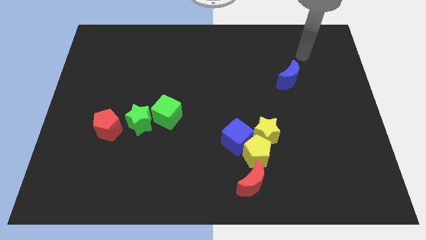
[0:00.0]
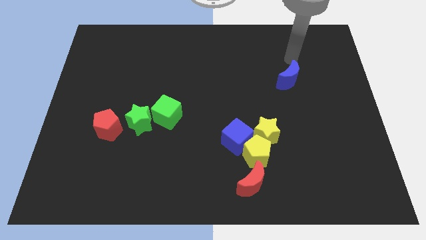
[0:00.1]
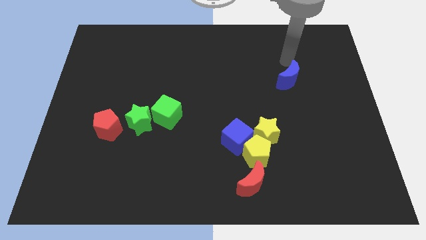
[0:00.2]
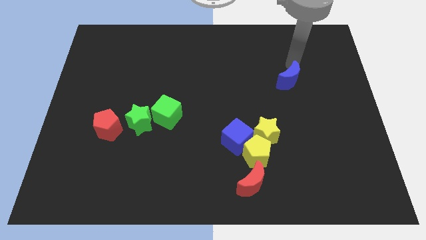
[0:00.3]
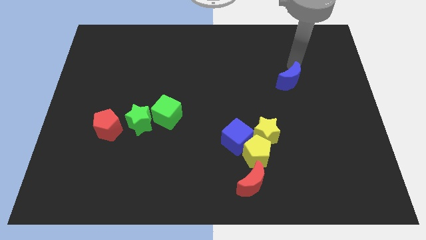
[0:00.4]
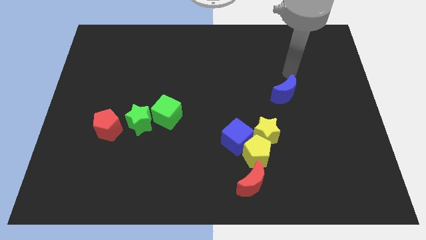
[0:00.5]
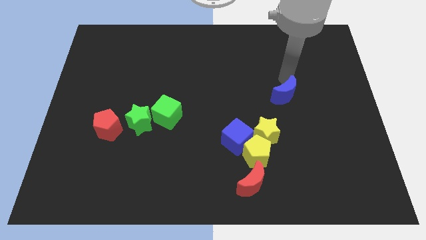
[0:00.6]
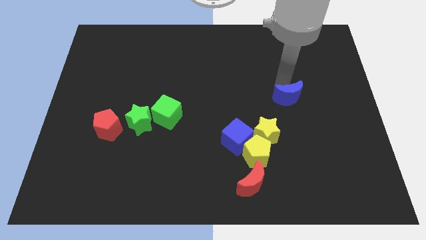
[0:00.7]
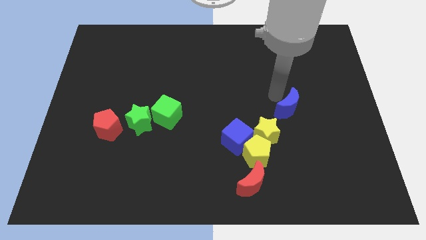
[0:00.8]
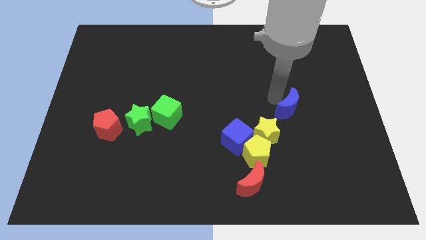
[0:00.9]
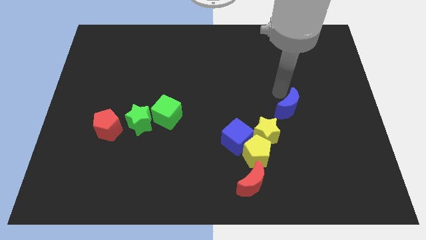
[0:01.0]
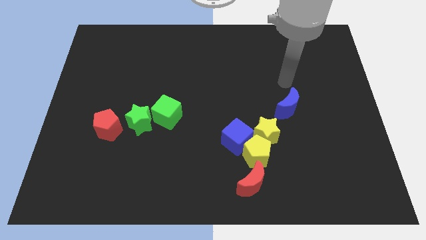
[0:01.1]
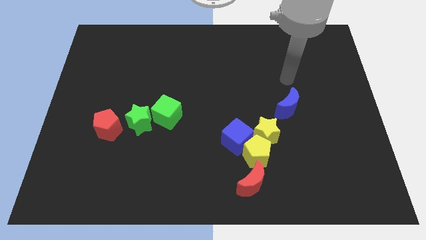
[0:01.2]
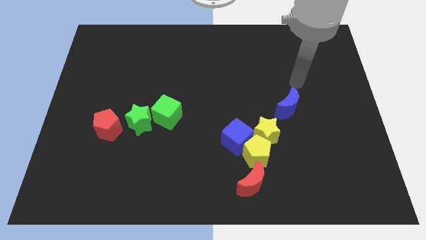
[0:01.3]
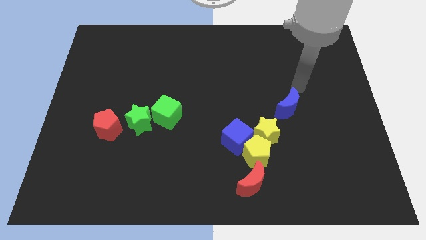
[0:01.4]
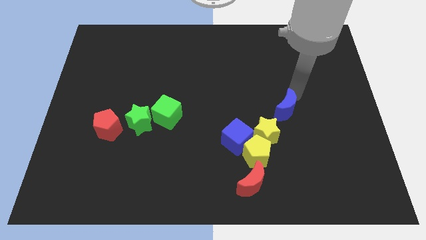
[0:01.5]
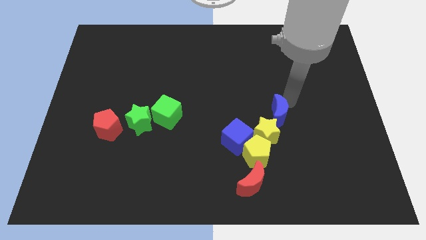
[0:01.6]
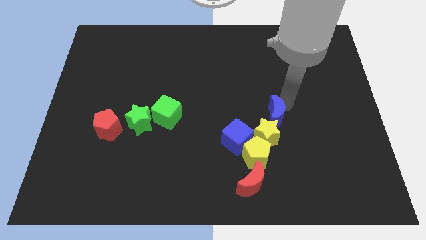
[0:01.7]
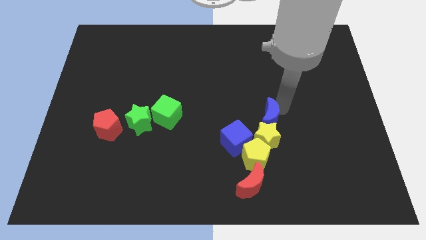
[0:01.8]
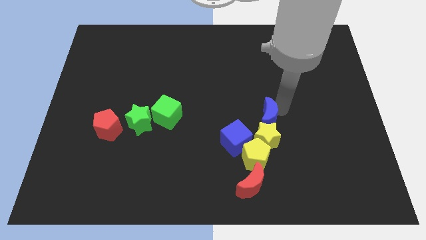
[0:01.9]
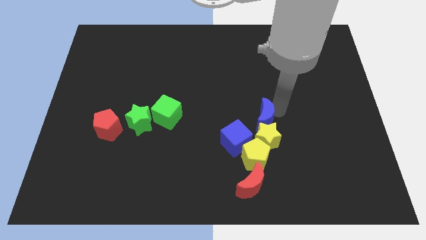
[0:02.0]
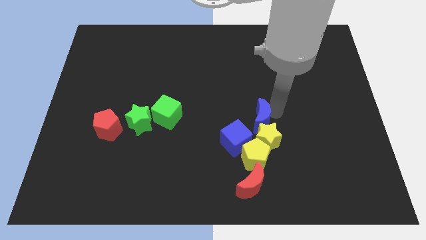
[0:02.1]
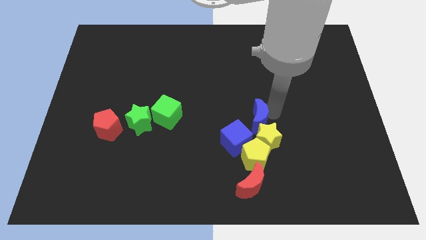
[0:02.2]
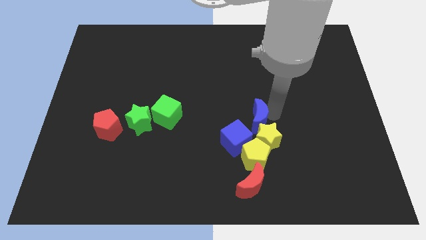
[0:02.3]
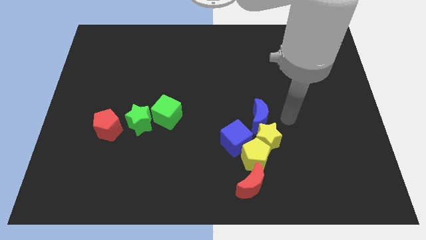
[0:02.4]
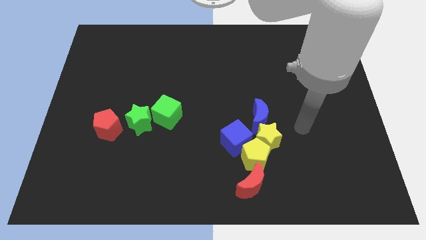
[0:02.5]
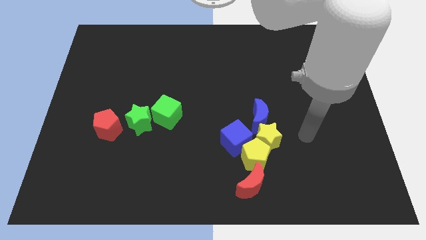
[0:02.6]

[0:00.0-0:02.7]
push the blue crescent to the top of the yellow pentagon

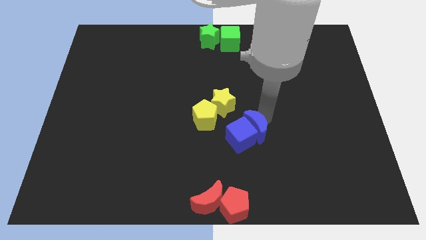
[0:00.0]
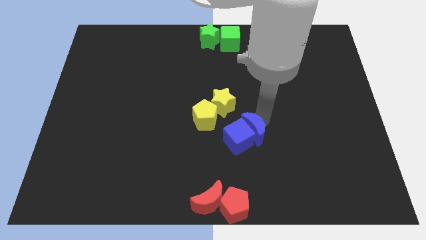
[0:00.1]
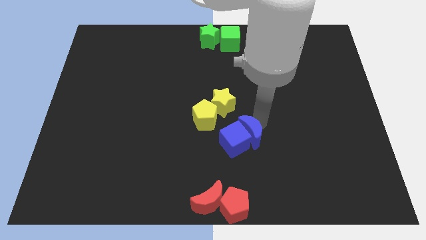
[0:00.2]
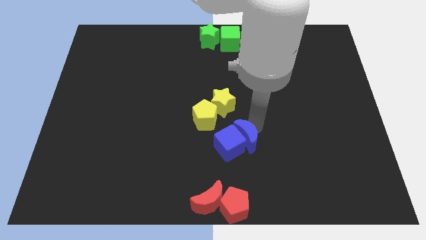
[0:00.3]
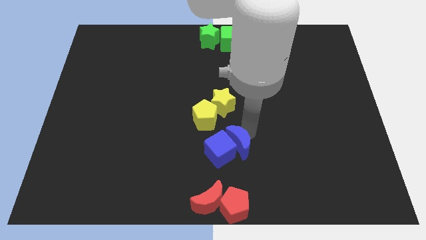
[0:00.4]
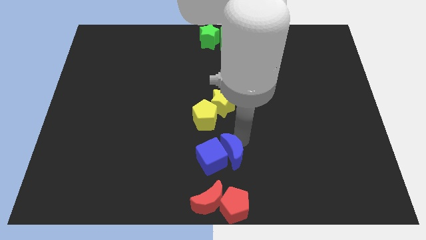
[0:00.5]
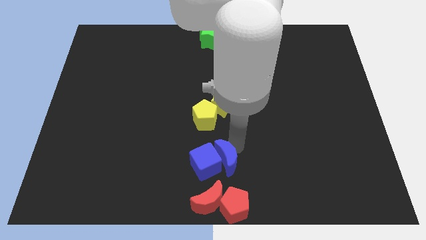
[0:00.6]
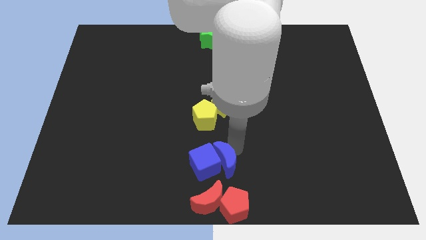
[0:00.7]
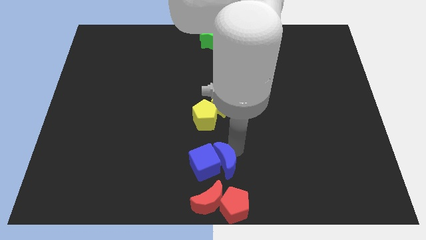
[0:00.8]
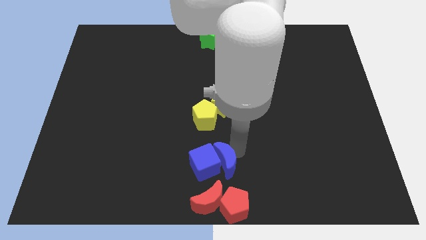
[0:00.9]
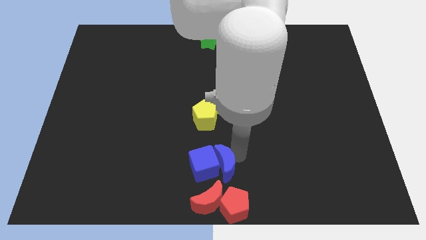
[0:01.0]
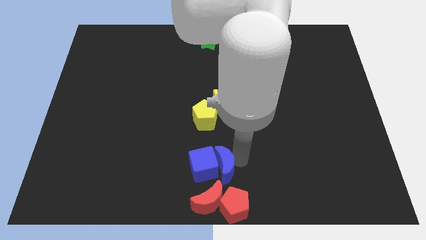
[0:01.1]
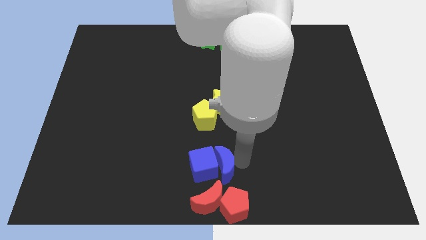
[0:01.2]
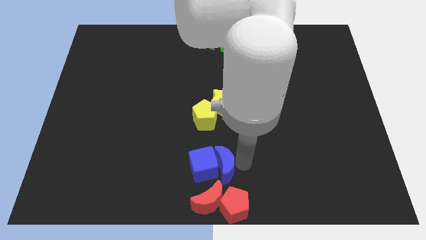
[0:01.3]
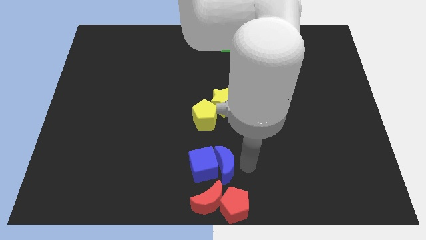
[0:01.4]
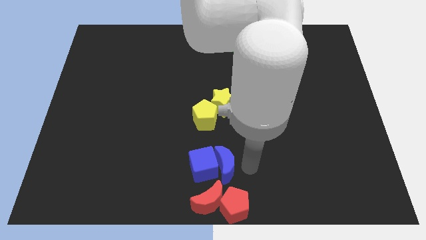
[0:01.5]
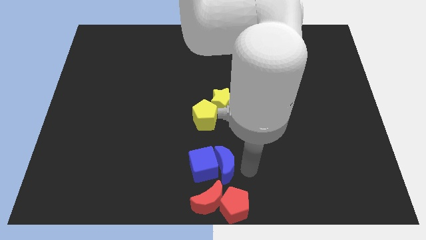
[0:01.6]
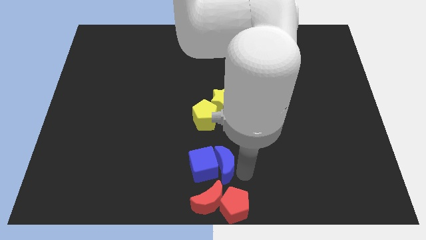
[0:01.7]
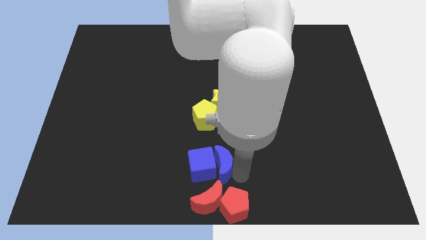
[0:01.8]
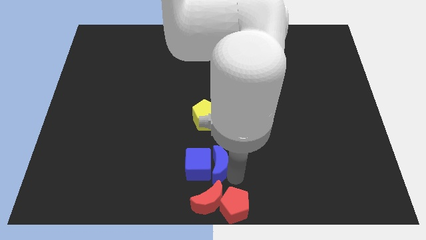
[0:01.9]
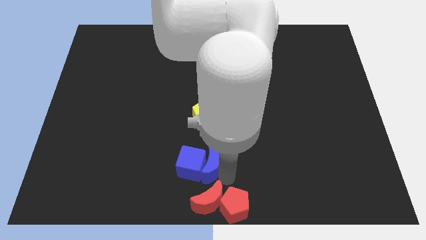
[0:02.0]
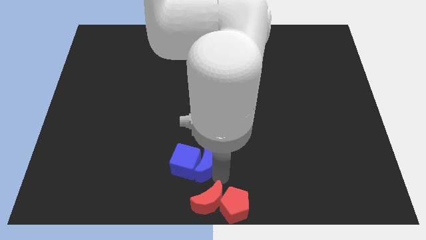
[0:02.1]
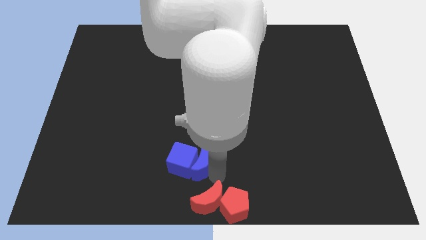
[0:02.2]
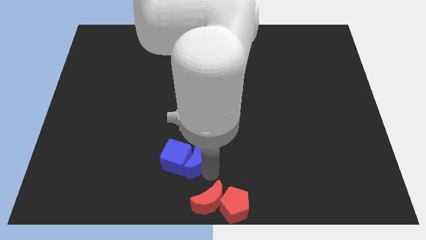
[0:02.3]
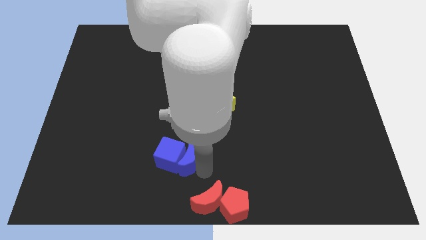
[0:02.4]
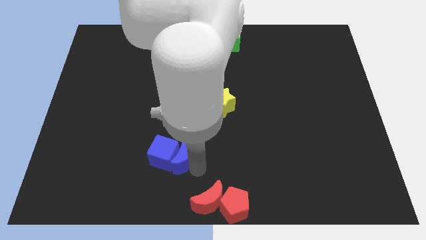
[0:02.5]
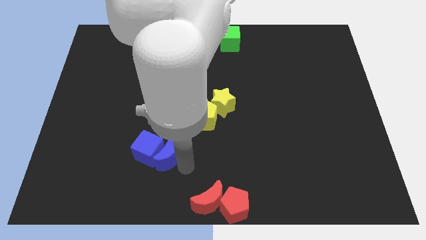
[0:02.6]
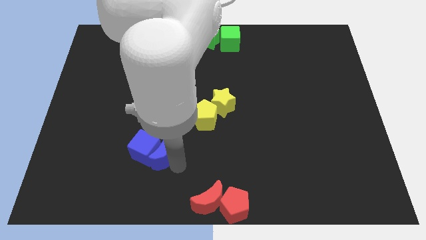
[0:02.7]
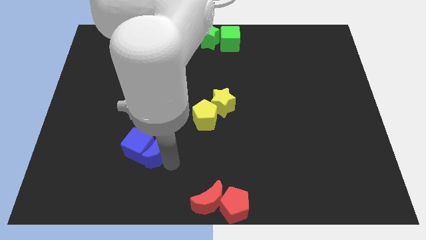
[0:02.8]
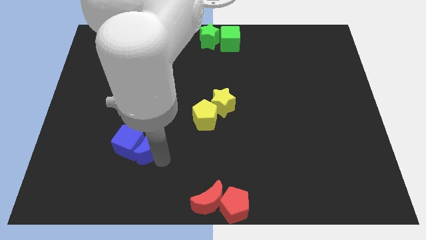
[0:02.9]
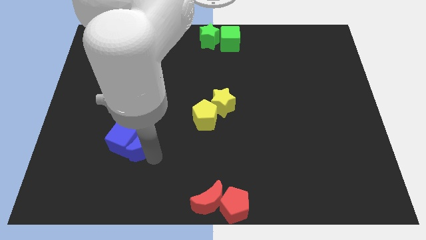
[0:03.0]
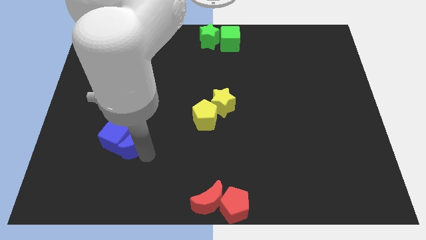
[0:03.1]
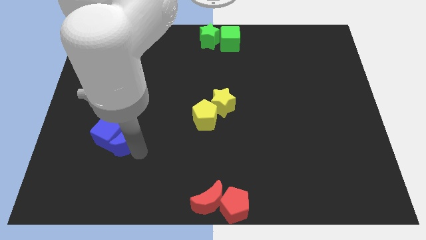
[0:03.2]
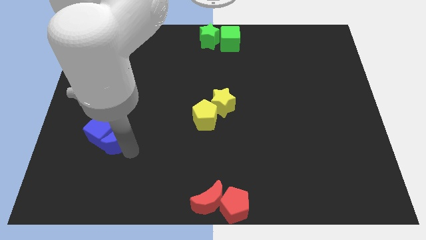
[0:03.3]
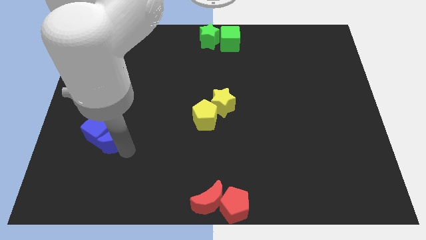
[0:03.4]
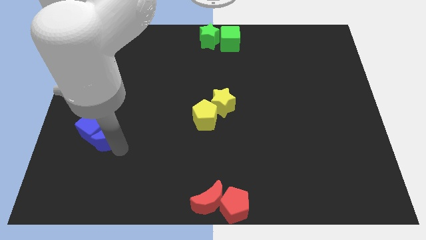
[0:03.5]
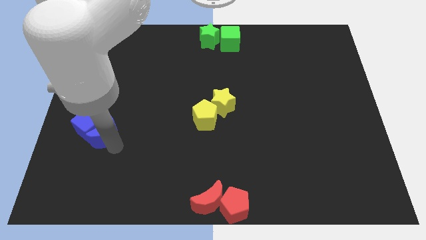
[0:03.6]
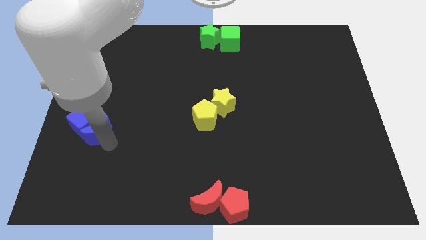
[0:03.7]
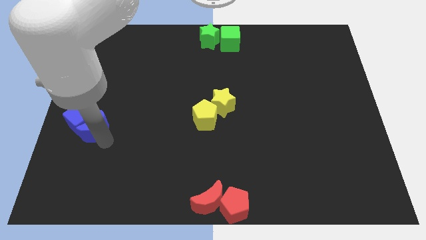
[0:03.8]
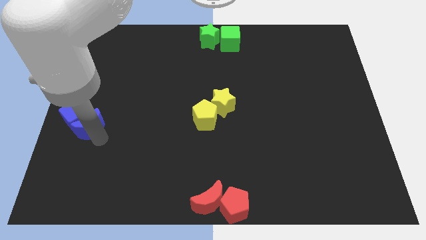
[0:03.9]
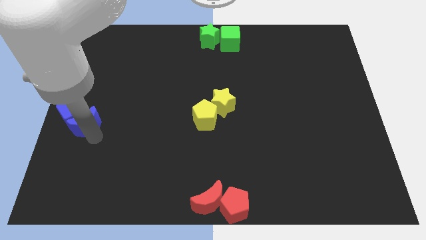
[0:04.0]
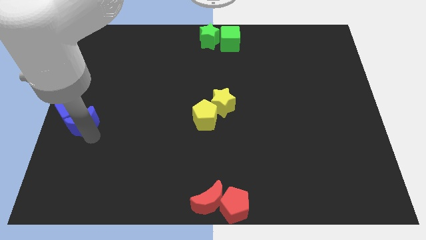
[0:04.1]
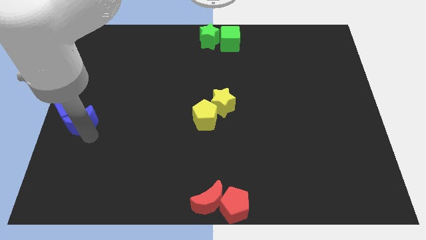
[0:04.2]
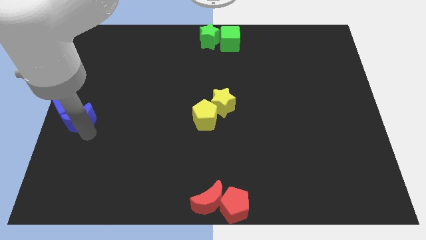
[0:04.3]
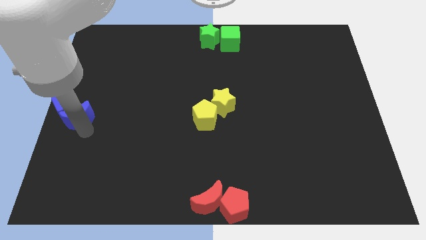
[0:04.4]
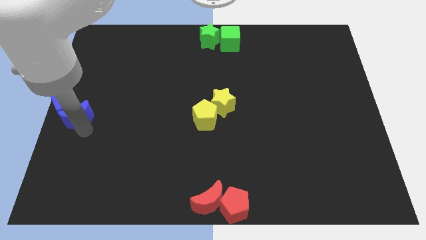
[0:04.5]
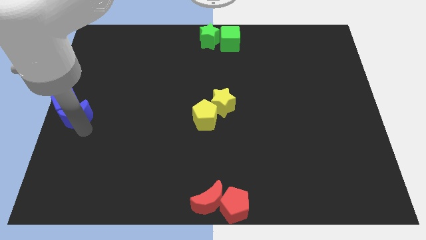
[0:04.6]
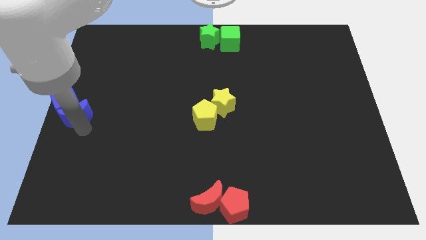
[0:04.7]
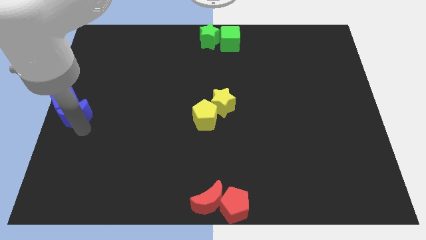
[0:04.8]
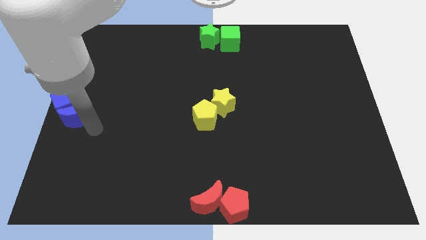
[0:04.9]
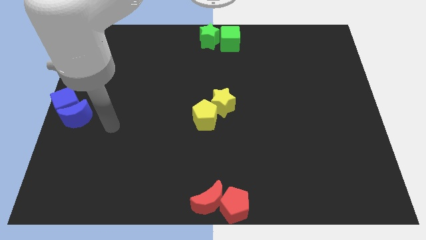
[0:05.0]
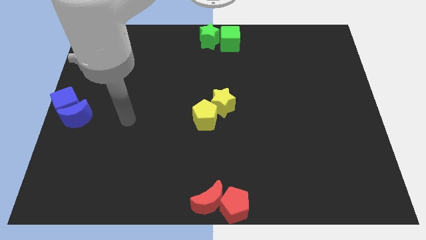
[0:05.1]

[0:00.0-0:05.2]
move blue blocks to the left center of the board

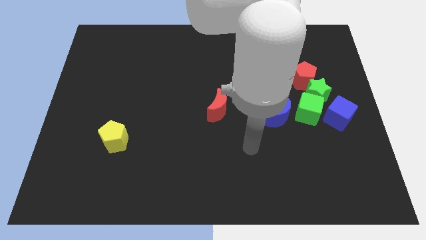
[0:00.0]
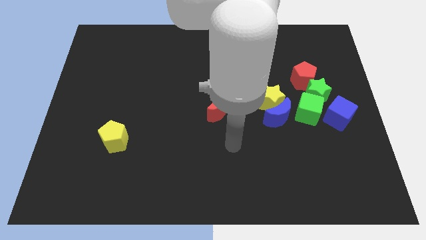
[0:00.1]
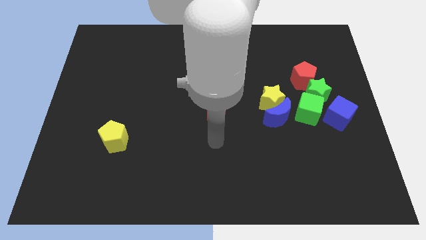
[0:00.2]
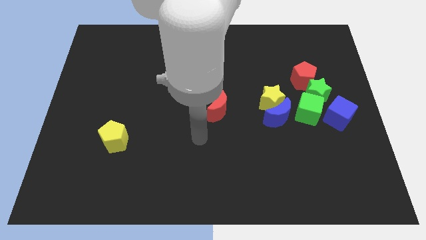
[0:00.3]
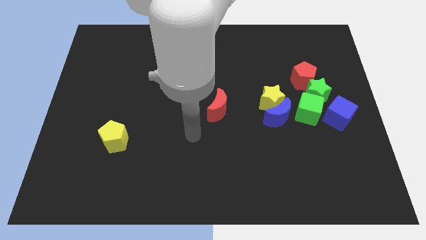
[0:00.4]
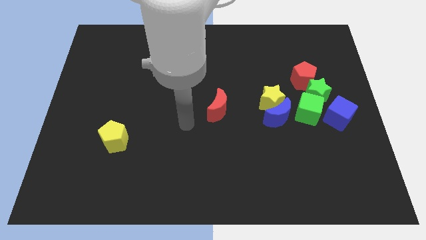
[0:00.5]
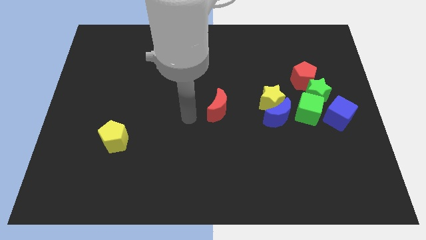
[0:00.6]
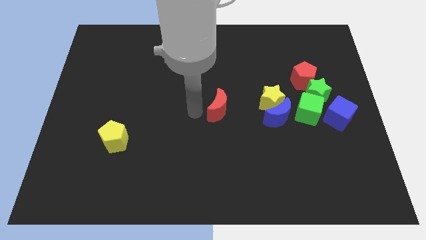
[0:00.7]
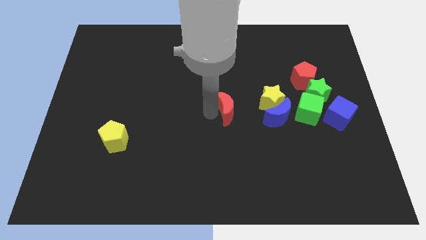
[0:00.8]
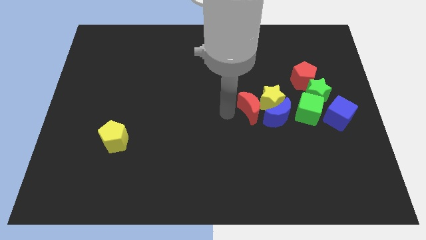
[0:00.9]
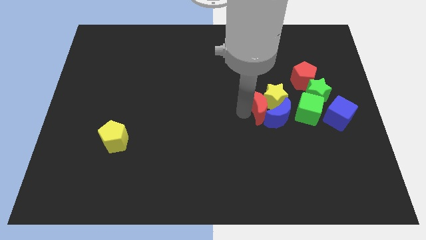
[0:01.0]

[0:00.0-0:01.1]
push the red crescent to the left of the yellow star
